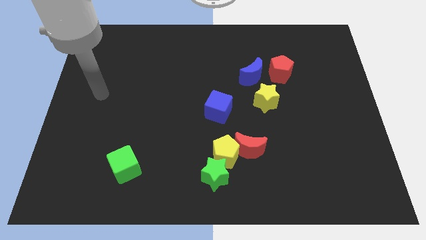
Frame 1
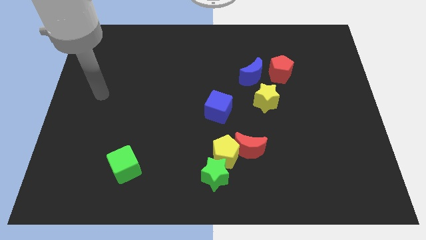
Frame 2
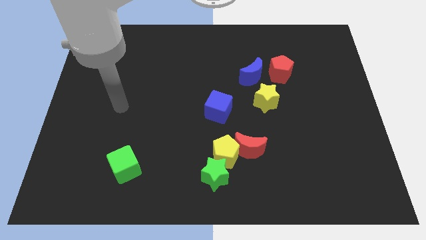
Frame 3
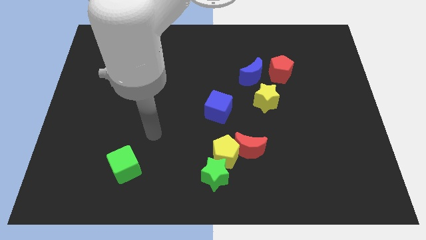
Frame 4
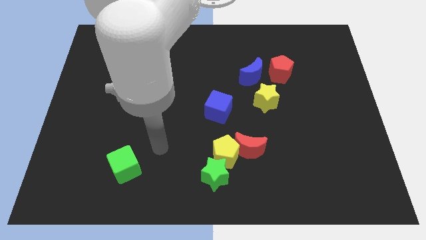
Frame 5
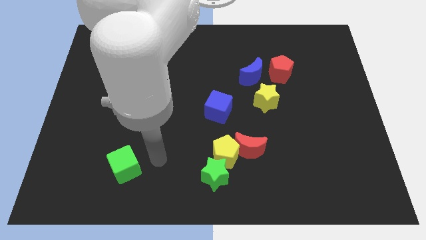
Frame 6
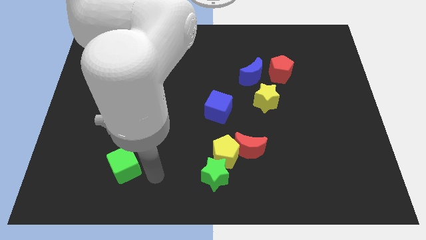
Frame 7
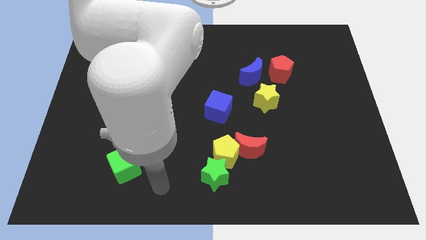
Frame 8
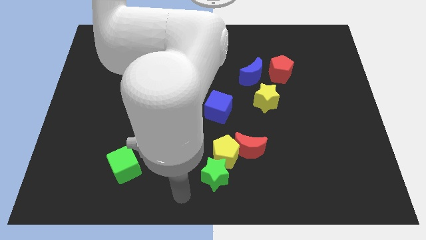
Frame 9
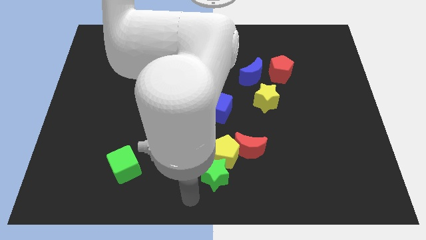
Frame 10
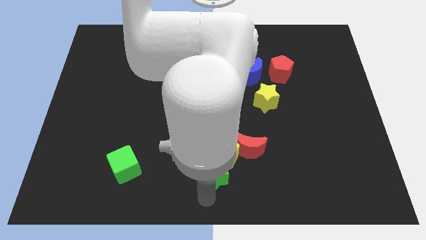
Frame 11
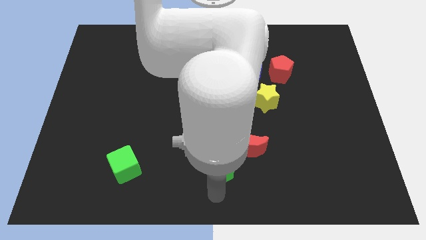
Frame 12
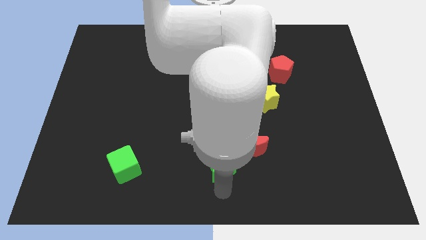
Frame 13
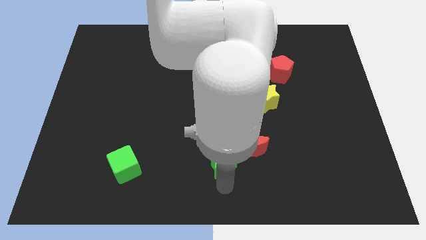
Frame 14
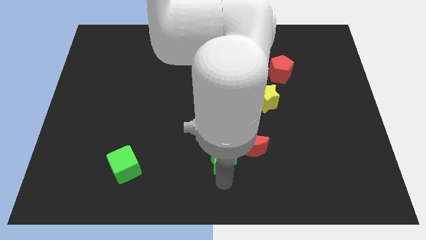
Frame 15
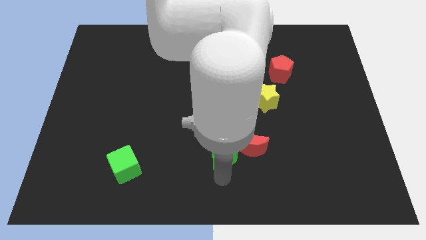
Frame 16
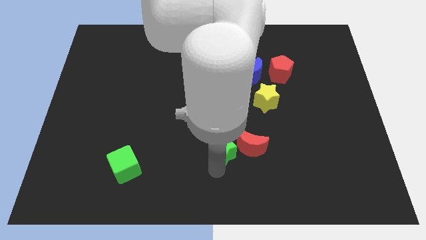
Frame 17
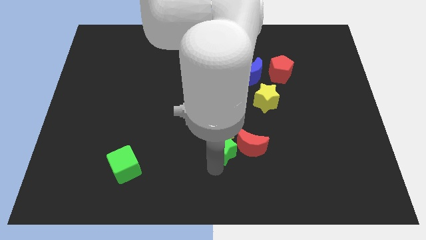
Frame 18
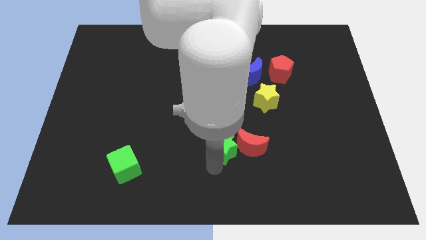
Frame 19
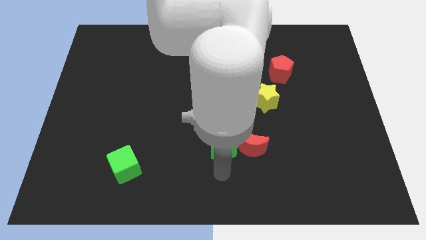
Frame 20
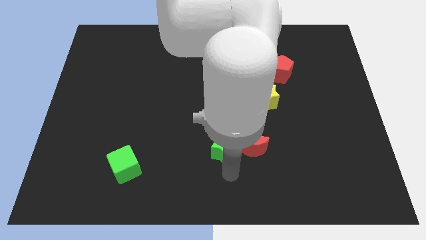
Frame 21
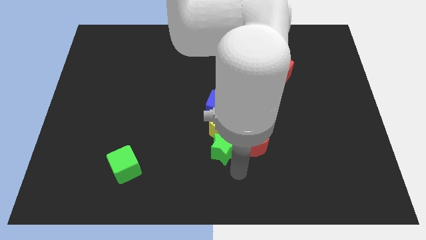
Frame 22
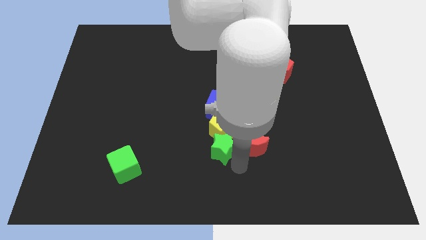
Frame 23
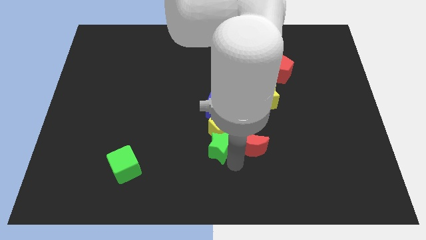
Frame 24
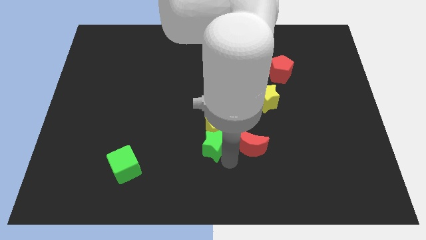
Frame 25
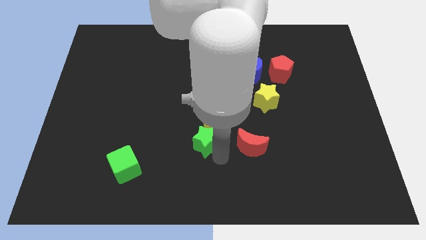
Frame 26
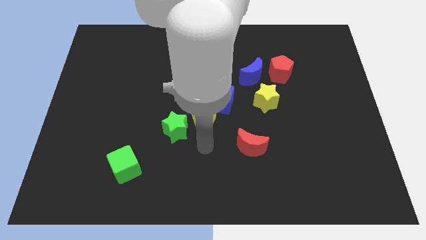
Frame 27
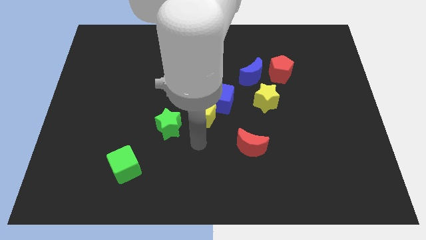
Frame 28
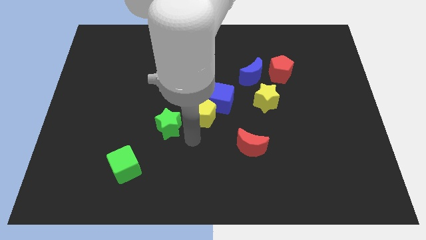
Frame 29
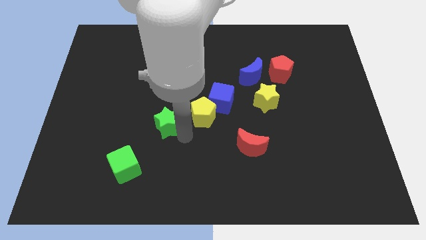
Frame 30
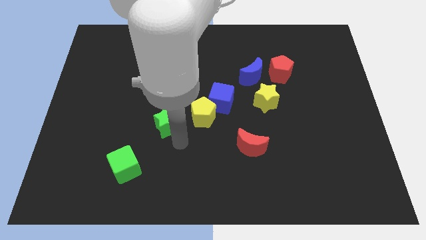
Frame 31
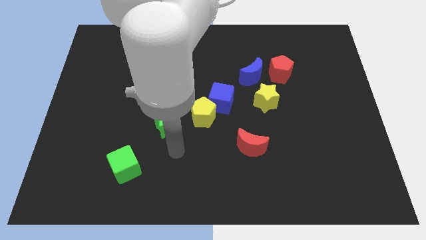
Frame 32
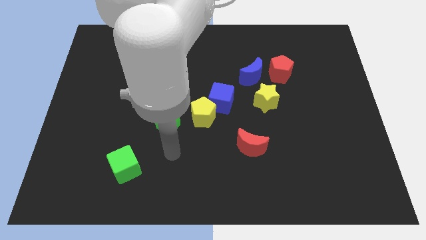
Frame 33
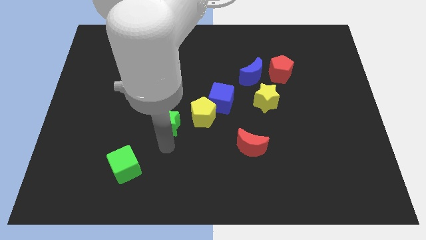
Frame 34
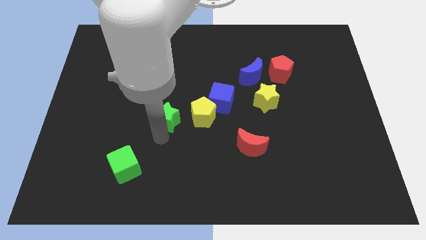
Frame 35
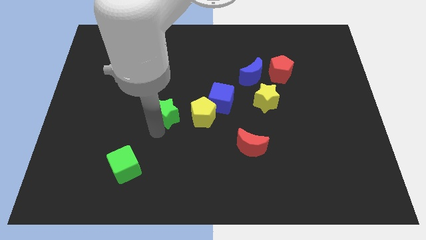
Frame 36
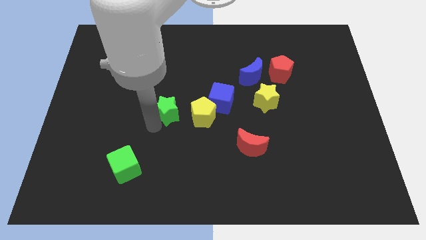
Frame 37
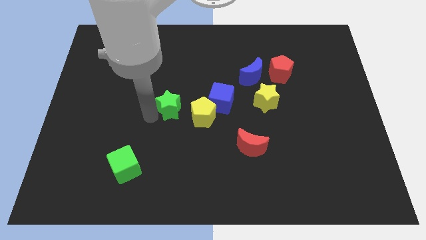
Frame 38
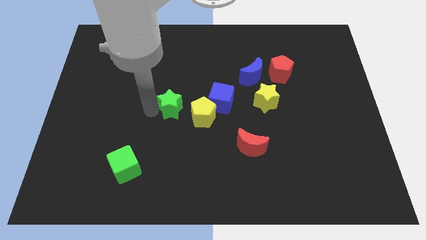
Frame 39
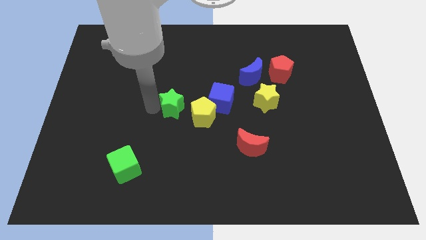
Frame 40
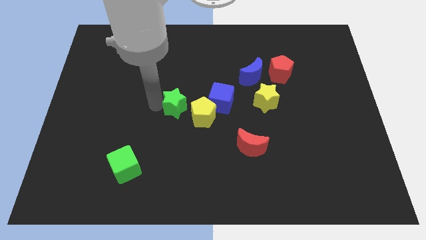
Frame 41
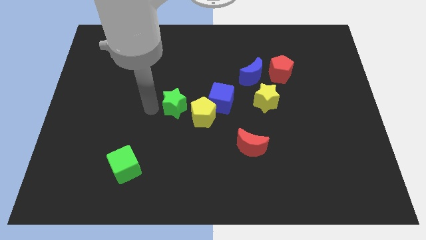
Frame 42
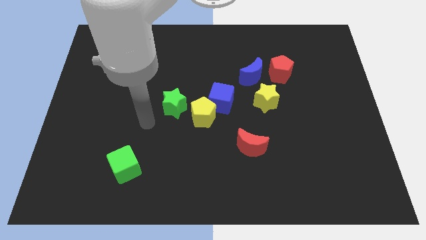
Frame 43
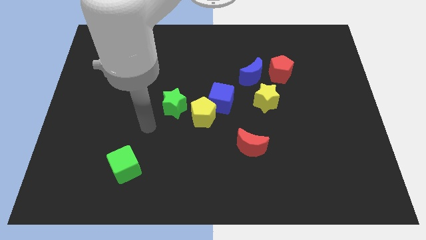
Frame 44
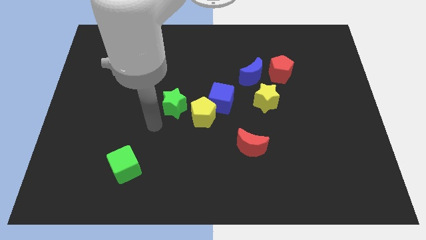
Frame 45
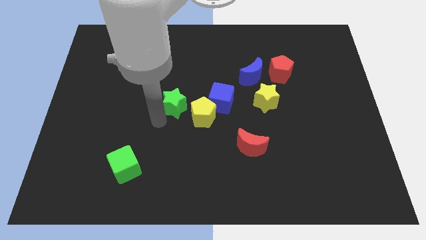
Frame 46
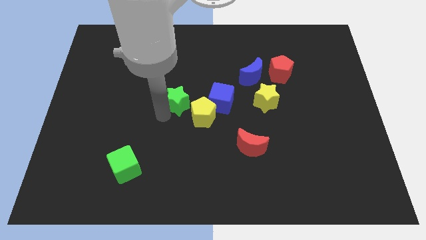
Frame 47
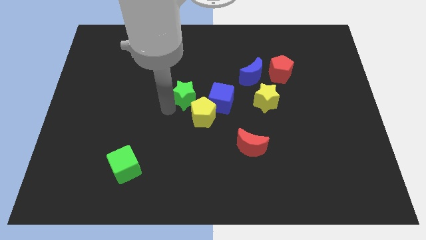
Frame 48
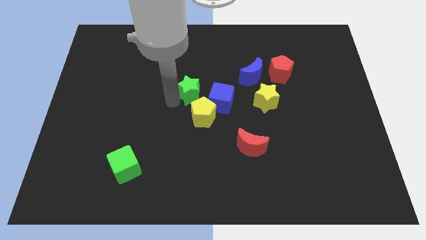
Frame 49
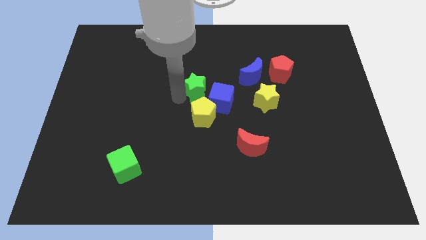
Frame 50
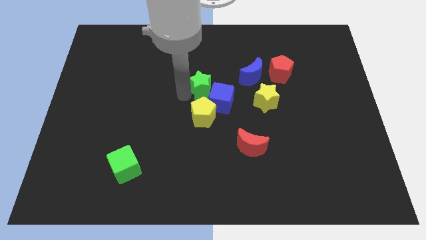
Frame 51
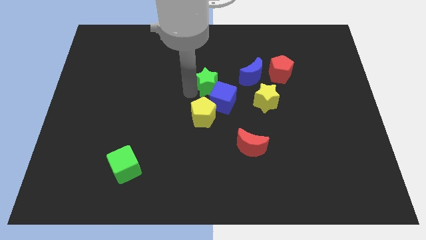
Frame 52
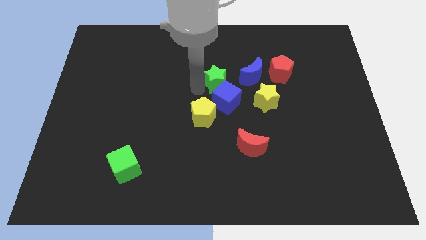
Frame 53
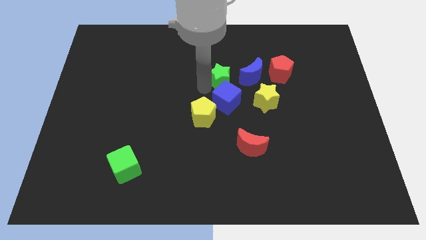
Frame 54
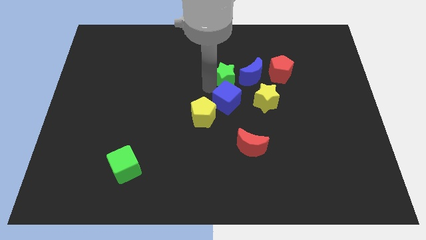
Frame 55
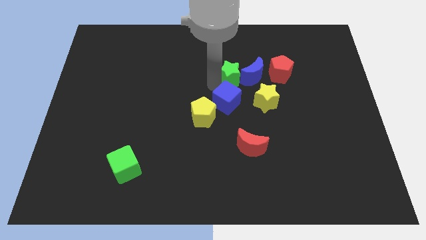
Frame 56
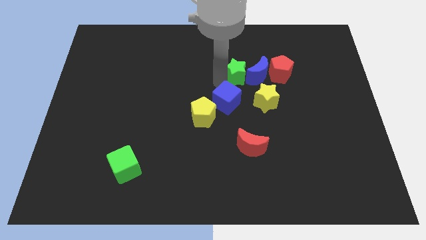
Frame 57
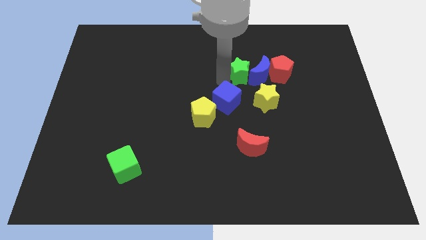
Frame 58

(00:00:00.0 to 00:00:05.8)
push the green star close to the blue moon

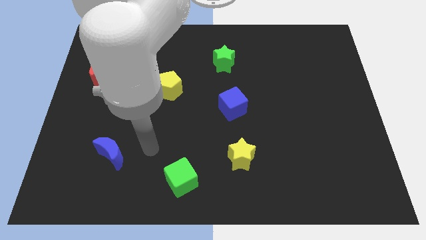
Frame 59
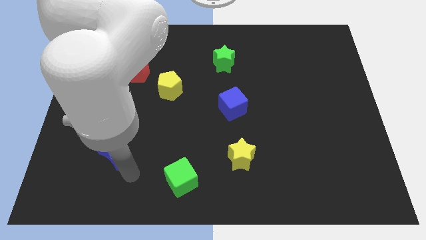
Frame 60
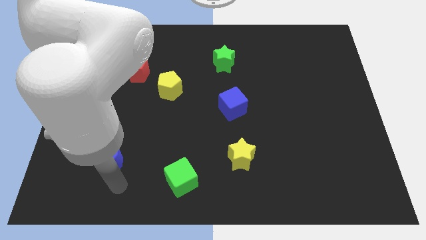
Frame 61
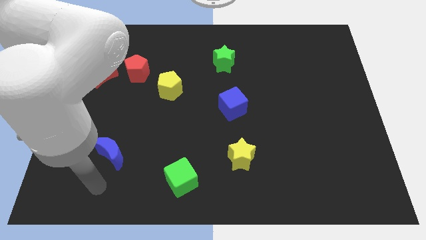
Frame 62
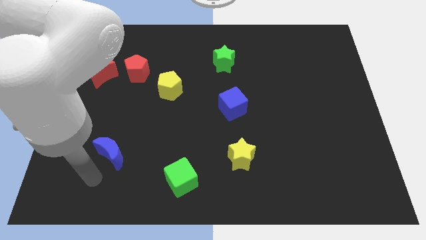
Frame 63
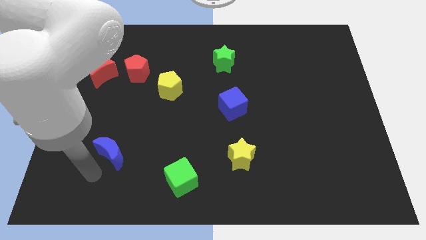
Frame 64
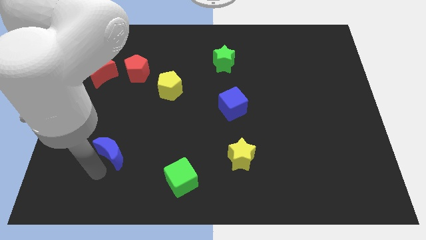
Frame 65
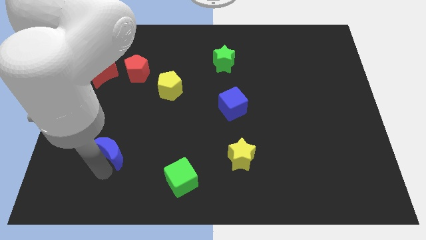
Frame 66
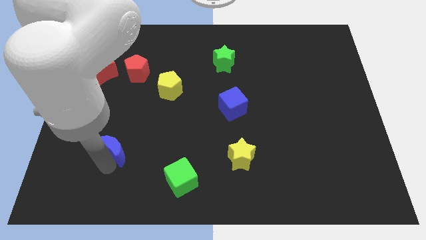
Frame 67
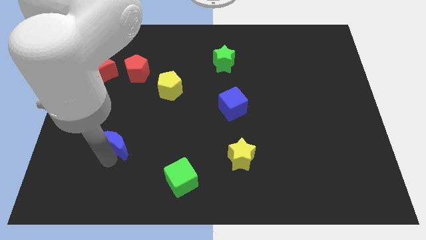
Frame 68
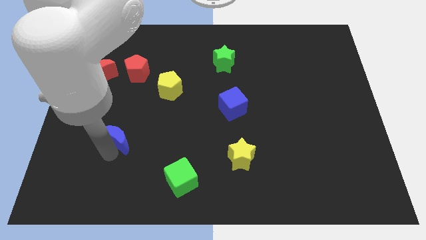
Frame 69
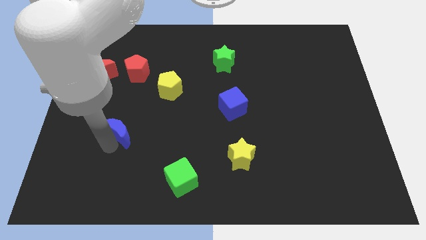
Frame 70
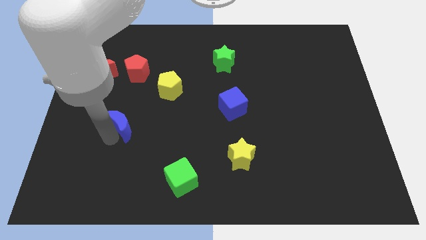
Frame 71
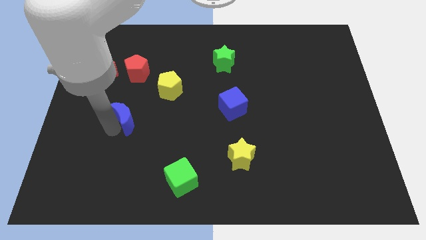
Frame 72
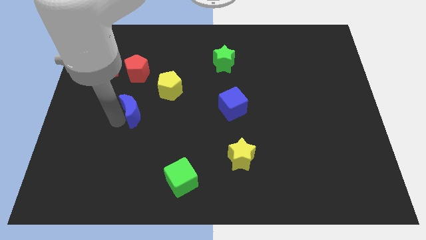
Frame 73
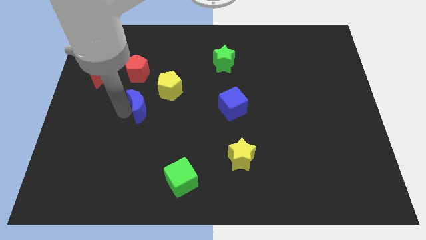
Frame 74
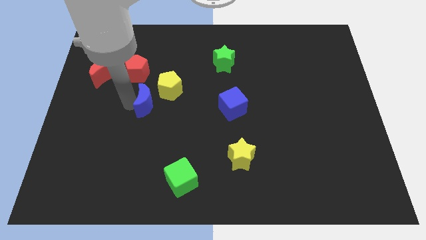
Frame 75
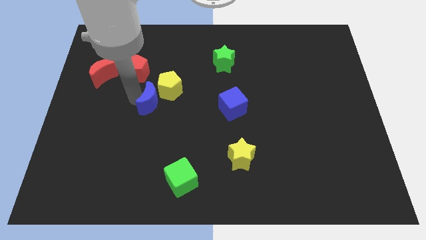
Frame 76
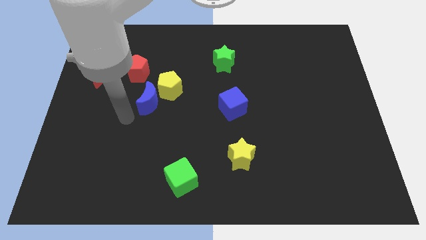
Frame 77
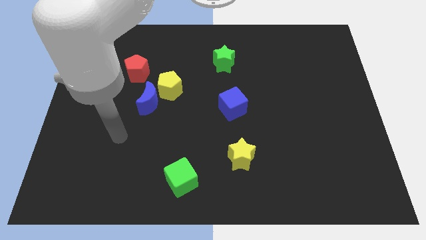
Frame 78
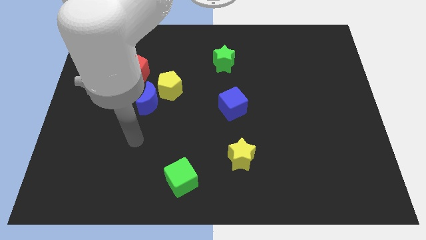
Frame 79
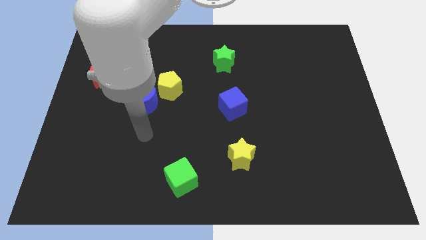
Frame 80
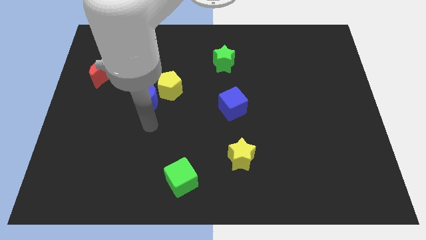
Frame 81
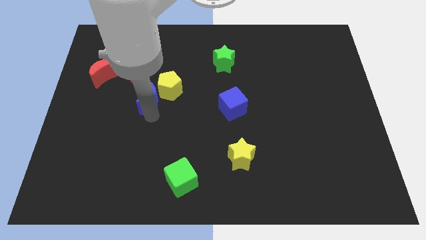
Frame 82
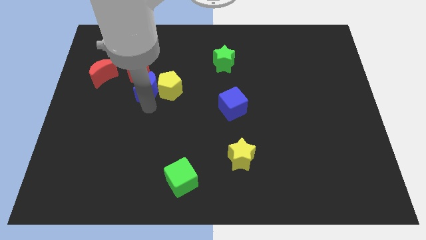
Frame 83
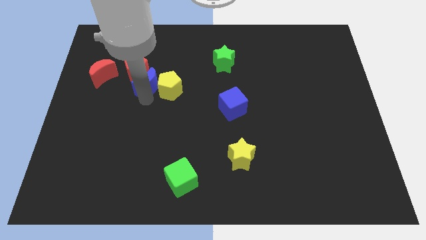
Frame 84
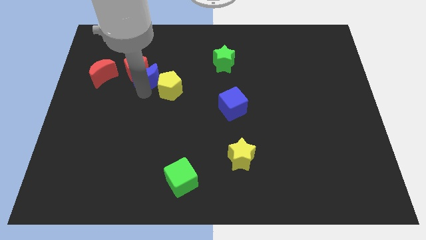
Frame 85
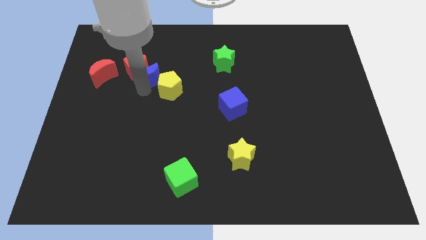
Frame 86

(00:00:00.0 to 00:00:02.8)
put the blue moon next to the red pentagon
